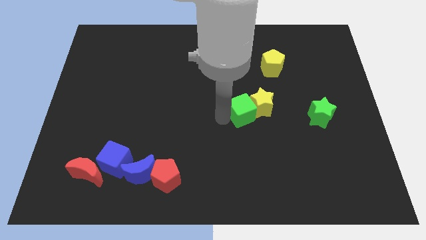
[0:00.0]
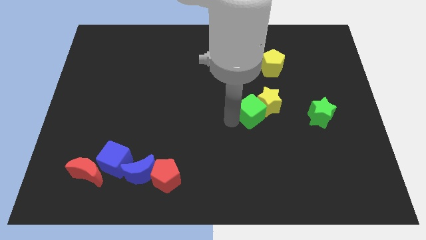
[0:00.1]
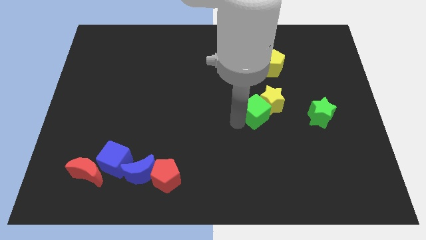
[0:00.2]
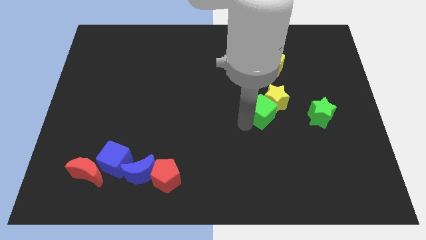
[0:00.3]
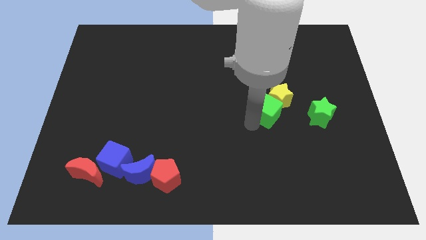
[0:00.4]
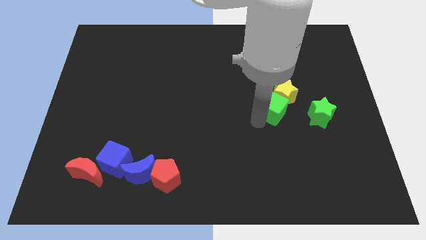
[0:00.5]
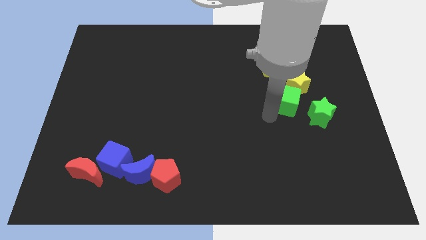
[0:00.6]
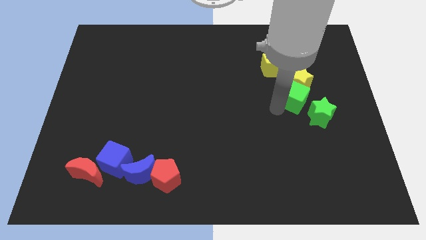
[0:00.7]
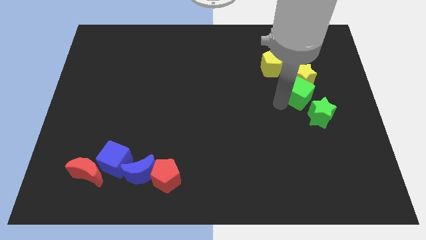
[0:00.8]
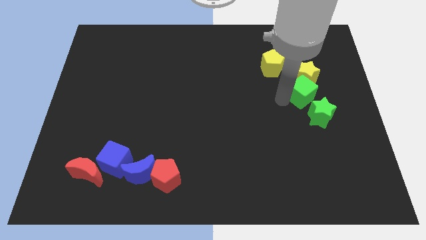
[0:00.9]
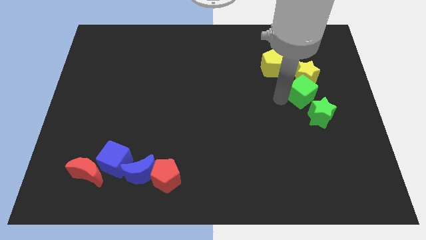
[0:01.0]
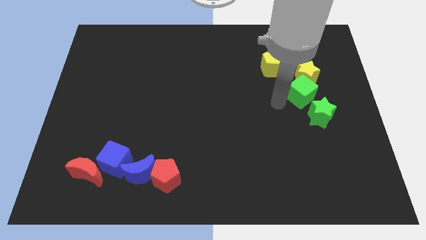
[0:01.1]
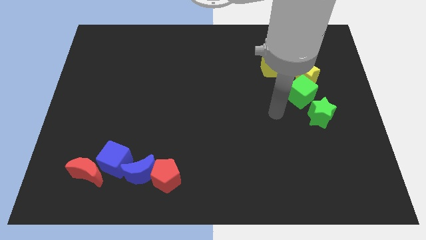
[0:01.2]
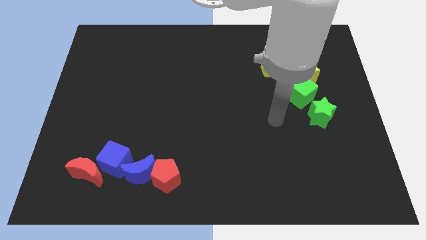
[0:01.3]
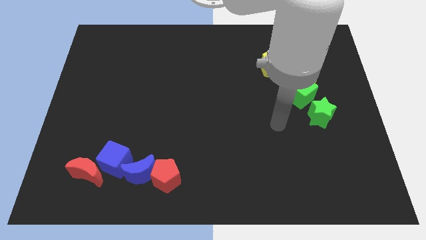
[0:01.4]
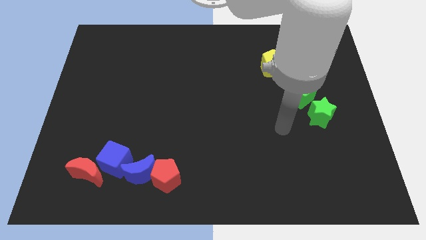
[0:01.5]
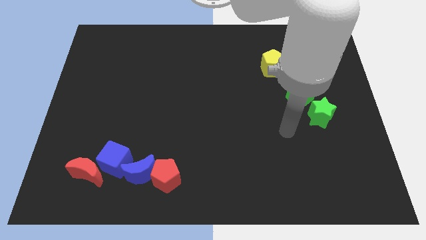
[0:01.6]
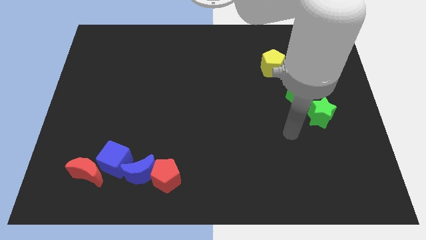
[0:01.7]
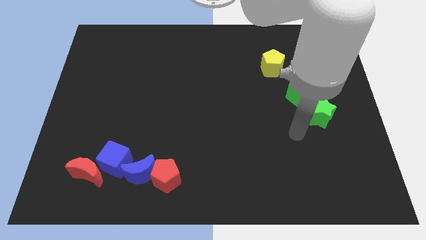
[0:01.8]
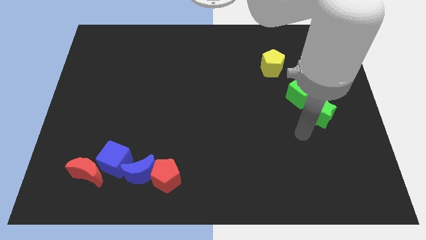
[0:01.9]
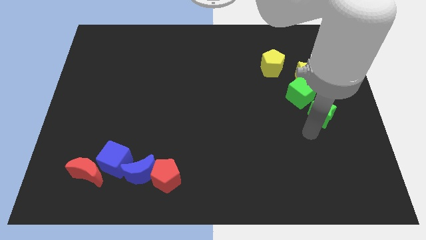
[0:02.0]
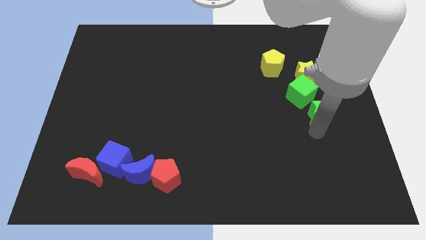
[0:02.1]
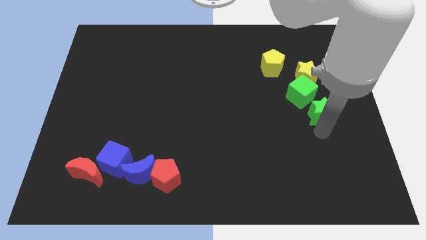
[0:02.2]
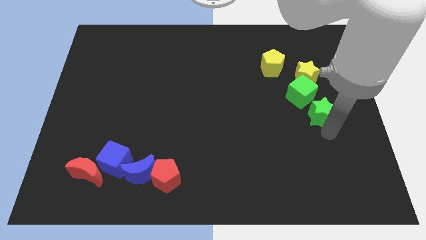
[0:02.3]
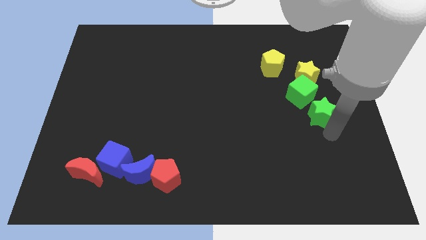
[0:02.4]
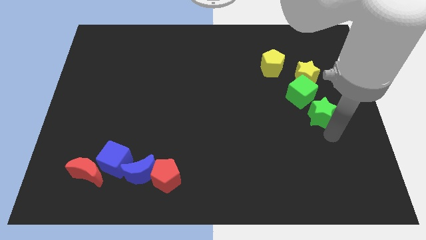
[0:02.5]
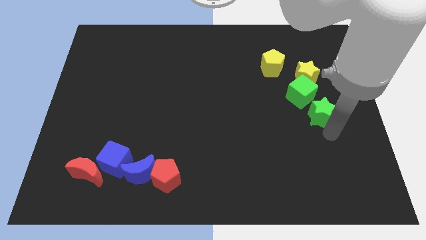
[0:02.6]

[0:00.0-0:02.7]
push the green cube and yellow star towards right

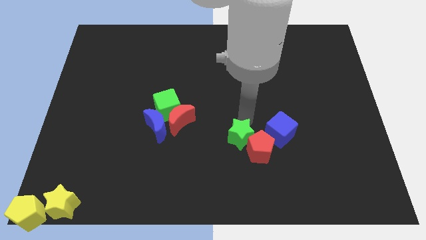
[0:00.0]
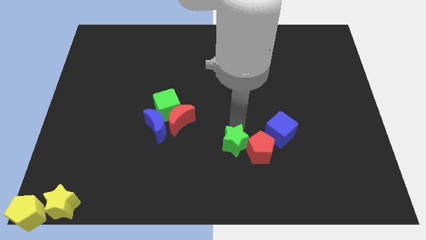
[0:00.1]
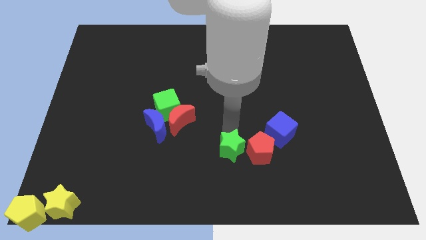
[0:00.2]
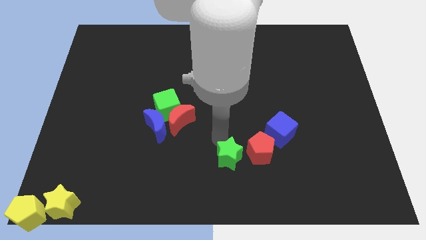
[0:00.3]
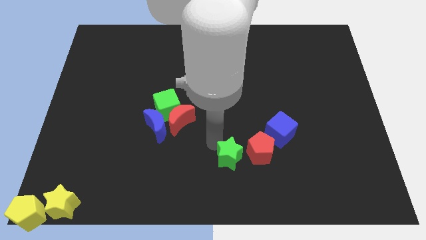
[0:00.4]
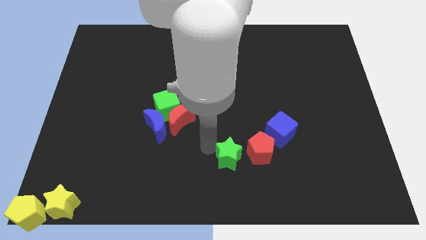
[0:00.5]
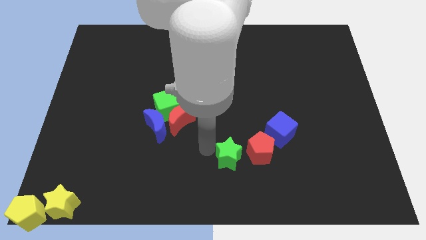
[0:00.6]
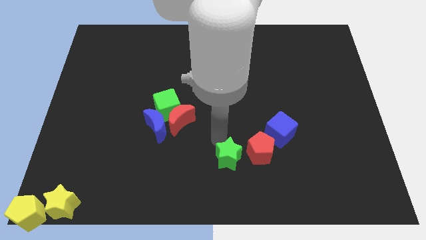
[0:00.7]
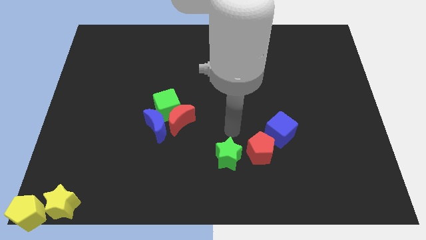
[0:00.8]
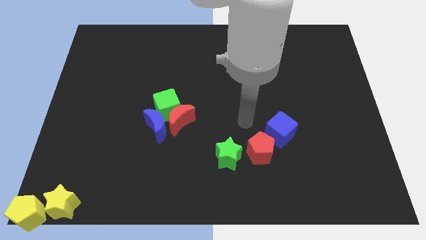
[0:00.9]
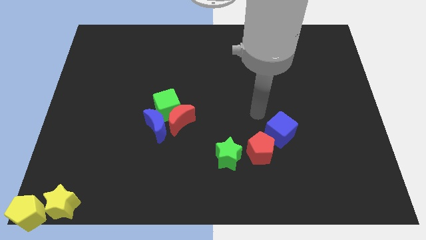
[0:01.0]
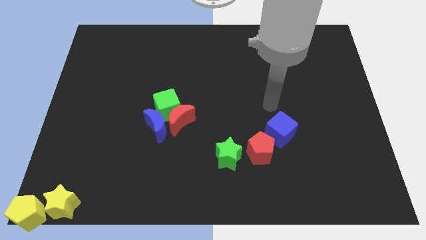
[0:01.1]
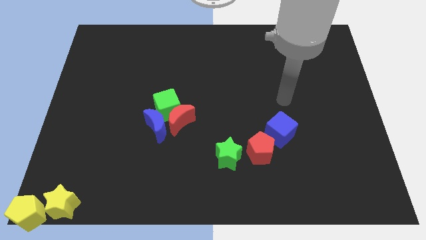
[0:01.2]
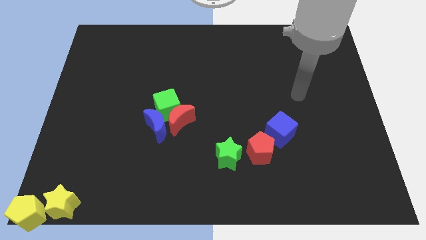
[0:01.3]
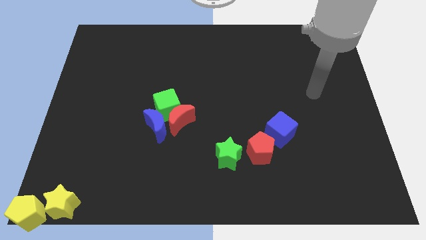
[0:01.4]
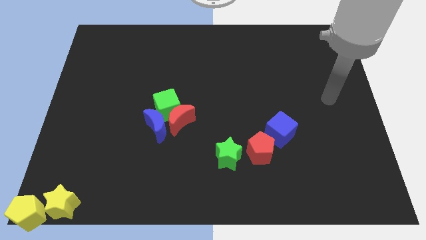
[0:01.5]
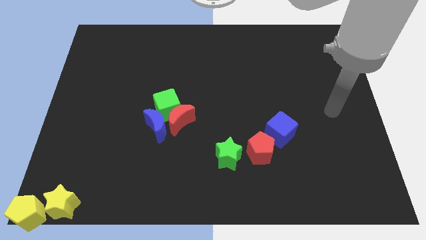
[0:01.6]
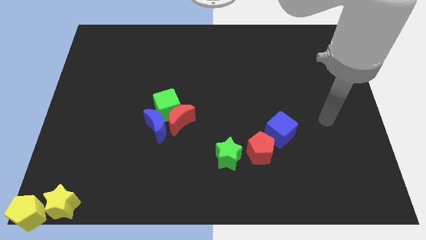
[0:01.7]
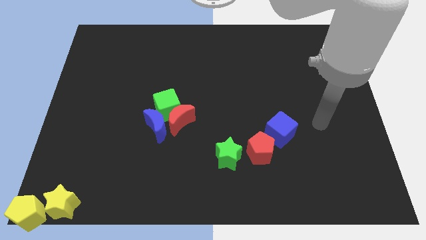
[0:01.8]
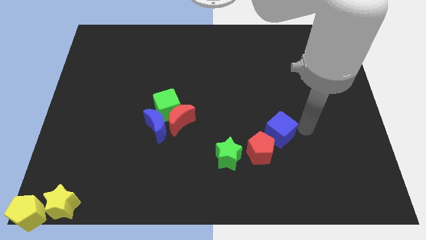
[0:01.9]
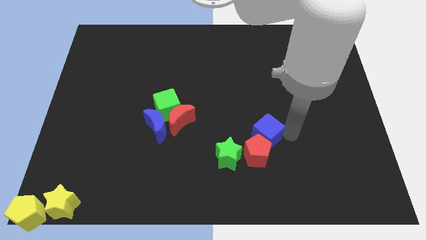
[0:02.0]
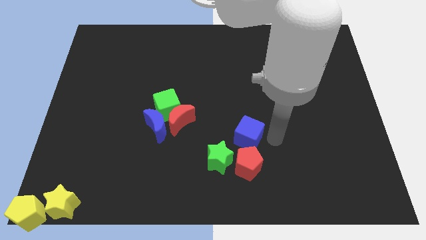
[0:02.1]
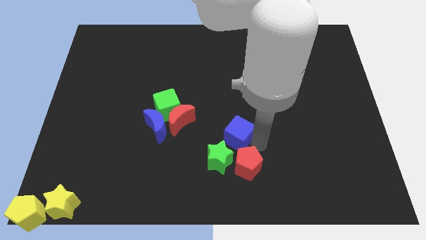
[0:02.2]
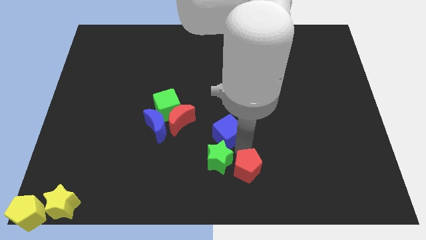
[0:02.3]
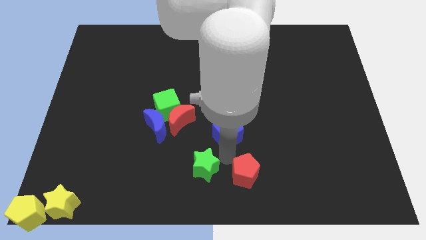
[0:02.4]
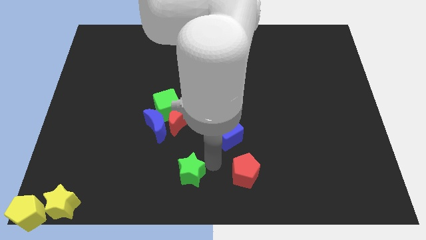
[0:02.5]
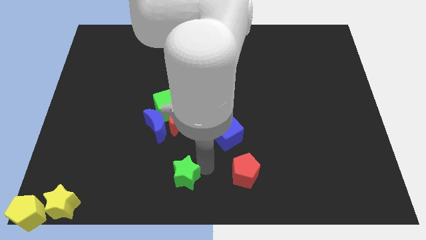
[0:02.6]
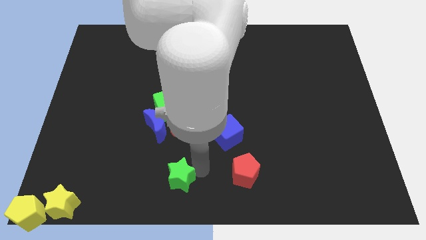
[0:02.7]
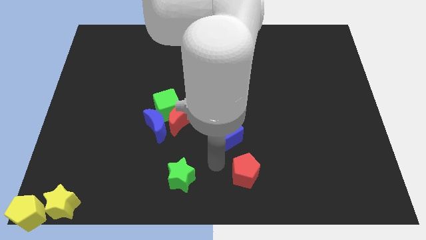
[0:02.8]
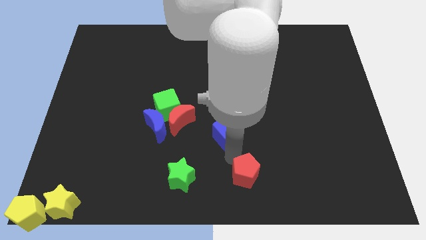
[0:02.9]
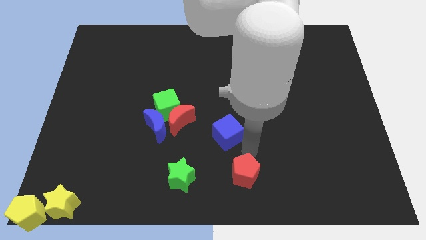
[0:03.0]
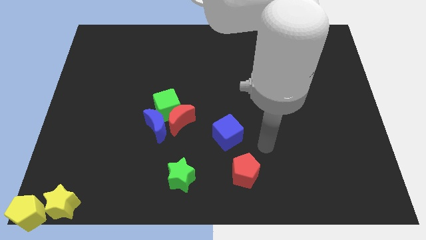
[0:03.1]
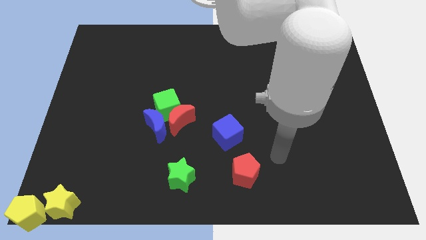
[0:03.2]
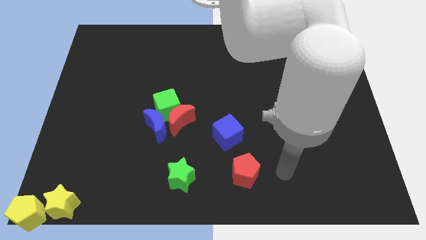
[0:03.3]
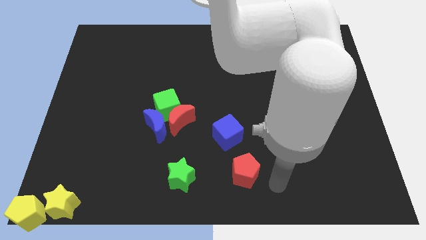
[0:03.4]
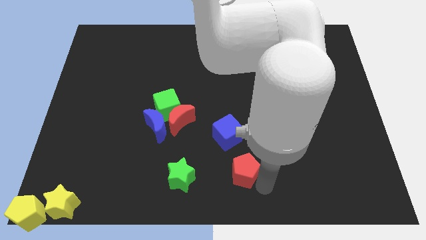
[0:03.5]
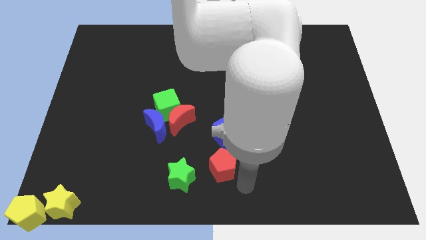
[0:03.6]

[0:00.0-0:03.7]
push the blue cube green star and red pentagon towards bottom side

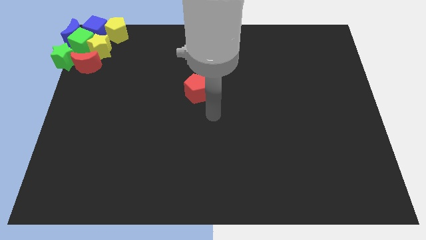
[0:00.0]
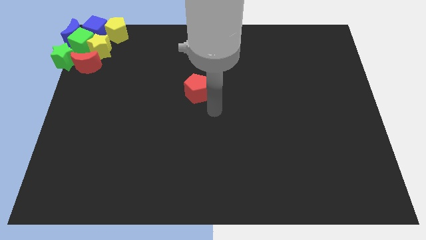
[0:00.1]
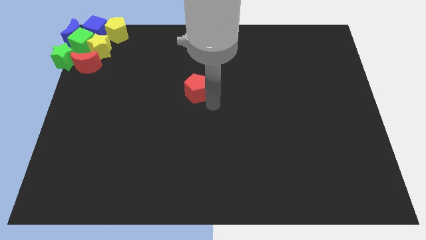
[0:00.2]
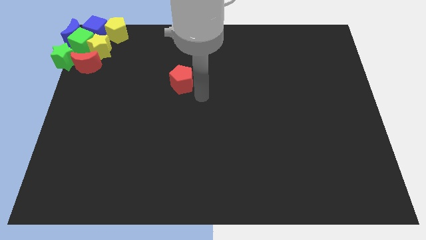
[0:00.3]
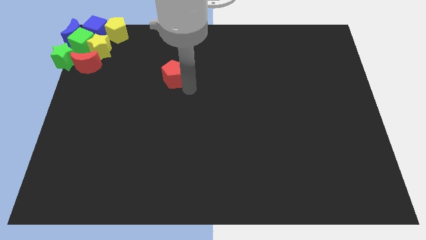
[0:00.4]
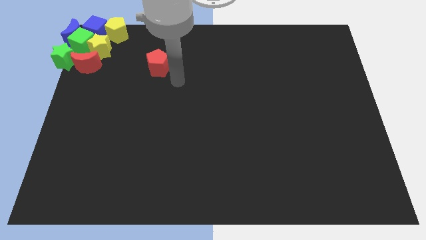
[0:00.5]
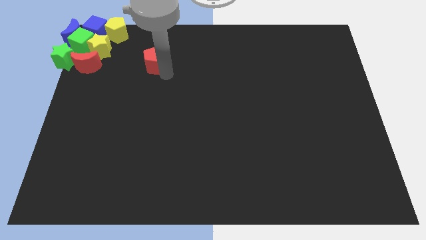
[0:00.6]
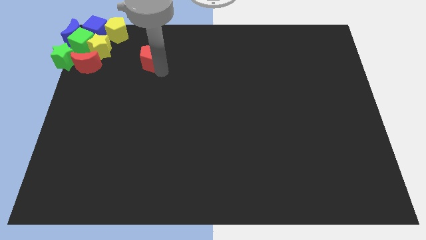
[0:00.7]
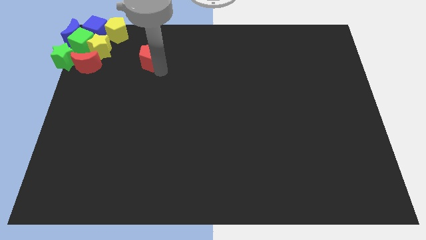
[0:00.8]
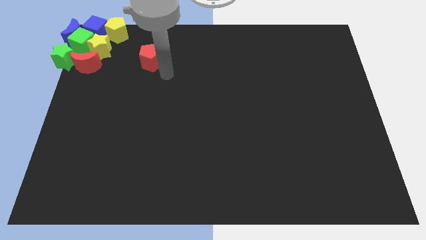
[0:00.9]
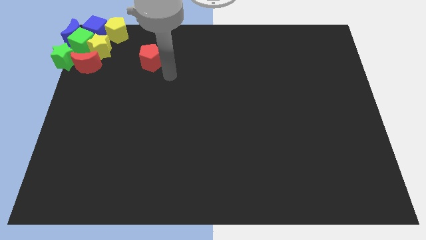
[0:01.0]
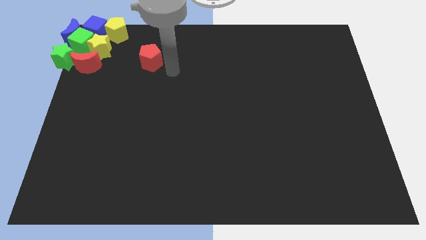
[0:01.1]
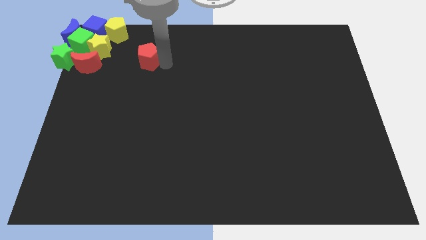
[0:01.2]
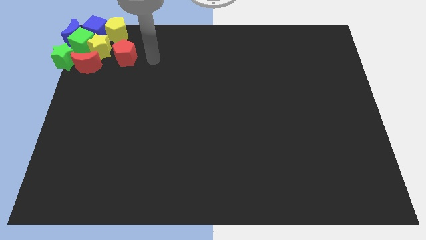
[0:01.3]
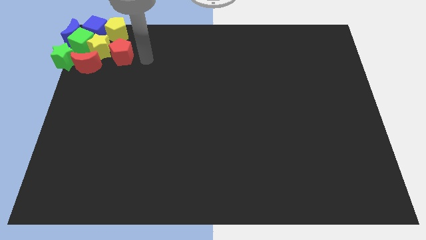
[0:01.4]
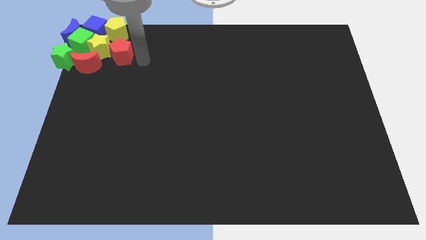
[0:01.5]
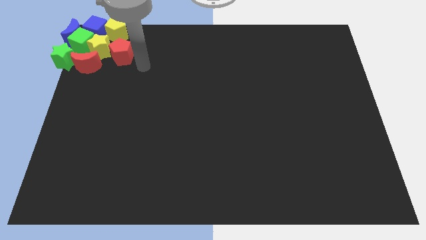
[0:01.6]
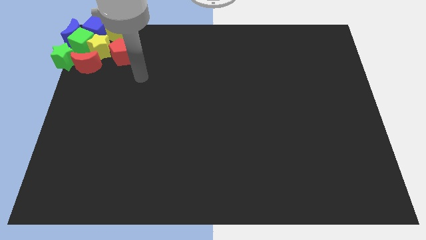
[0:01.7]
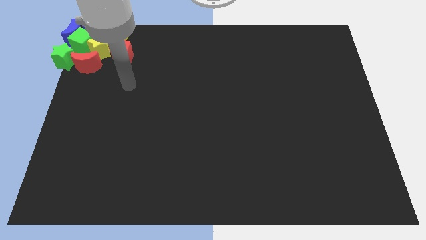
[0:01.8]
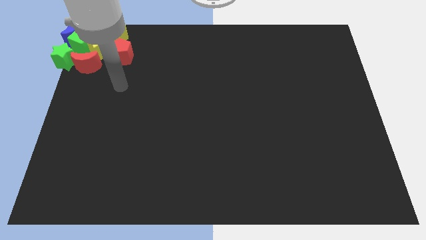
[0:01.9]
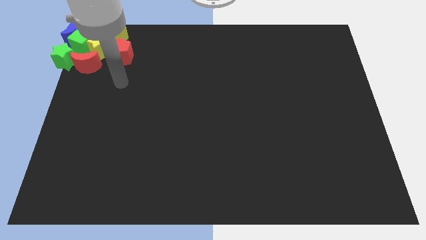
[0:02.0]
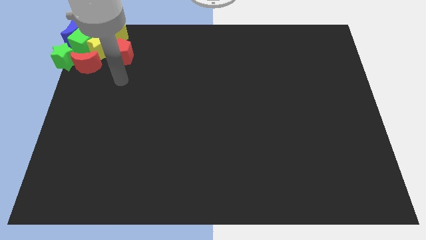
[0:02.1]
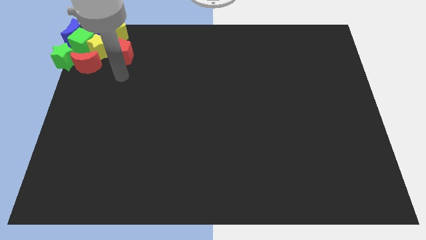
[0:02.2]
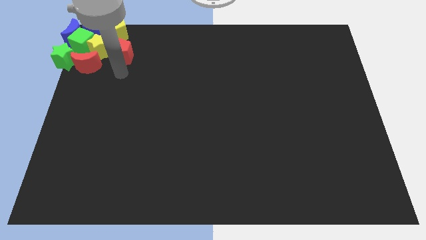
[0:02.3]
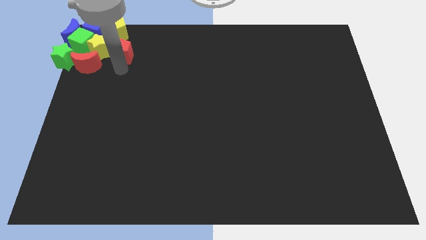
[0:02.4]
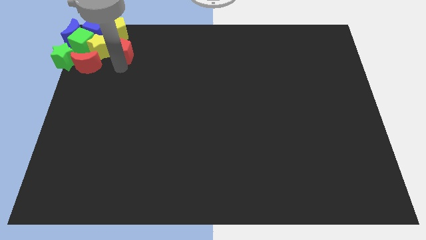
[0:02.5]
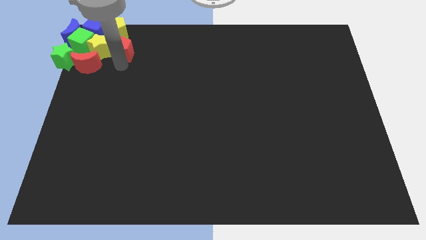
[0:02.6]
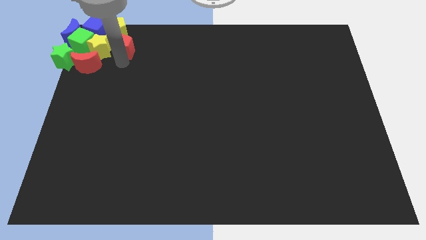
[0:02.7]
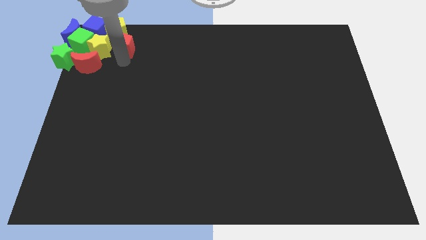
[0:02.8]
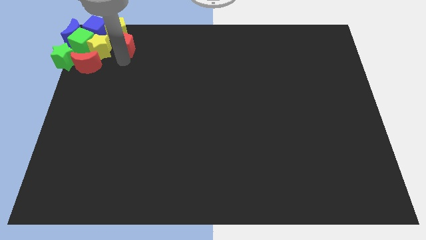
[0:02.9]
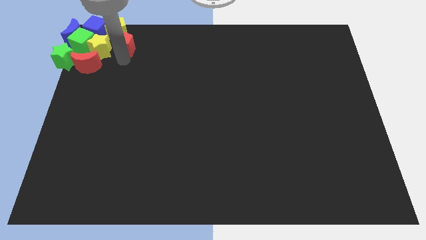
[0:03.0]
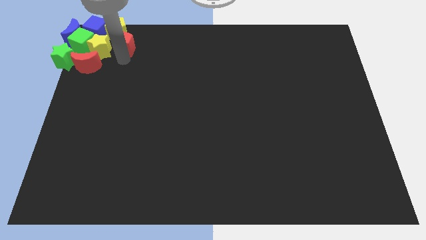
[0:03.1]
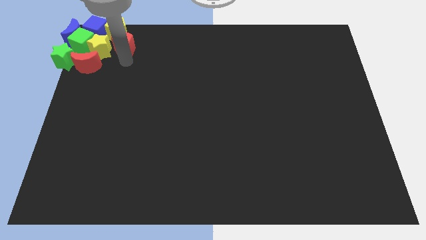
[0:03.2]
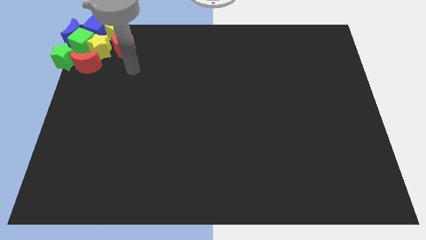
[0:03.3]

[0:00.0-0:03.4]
push the red pentagon towards the yellow blocks
